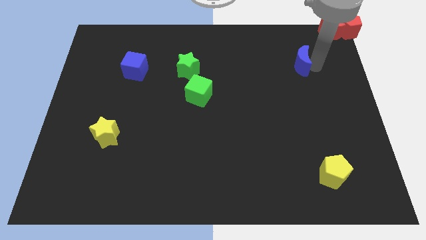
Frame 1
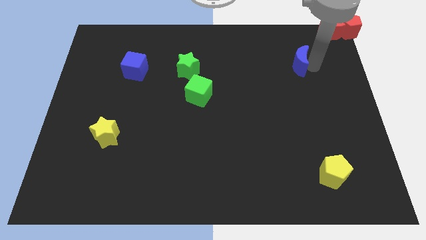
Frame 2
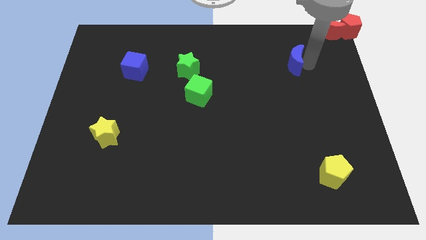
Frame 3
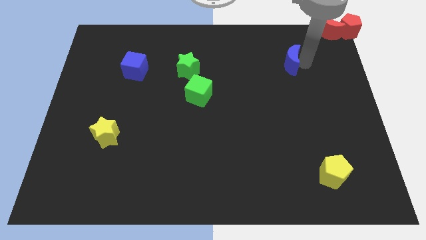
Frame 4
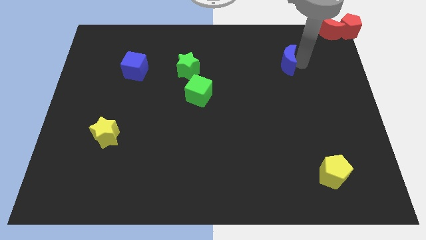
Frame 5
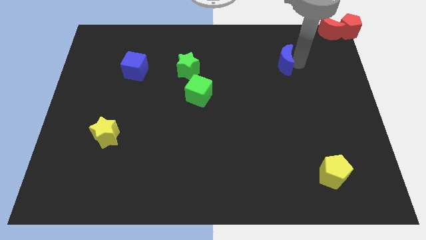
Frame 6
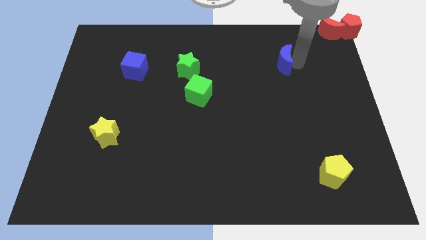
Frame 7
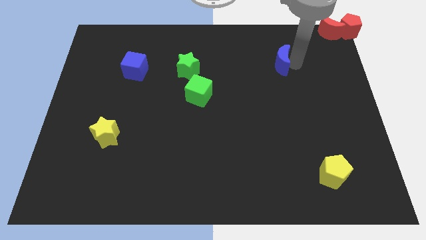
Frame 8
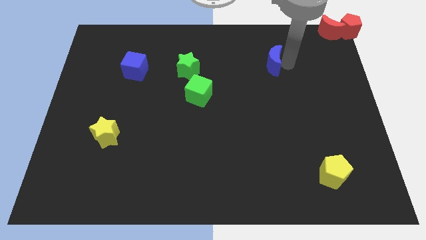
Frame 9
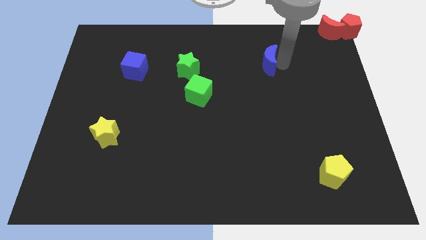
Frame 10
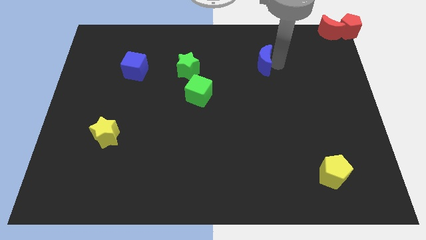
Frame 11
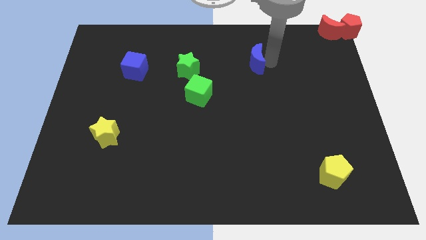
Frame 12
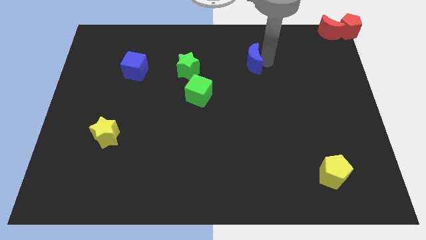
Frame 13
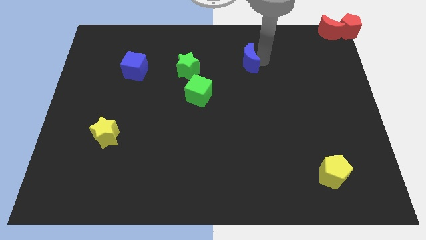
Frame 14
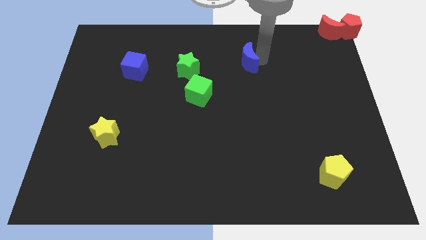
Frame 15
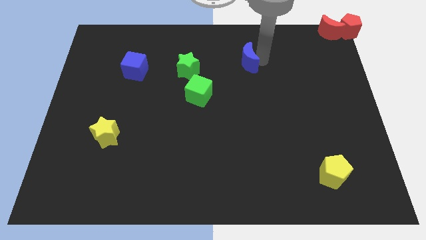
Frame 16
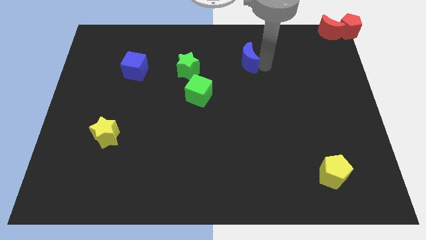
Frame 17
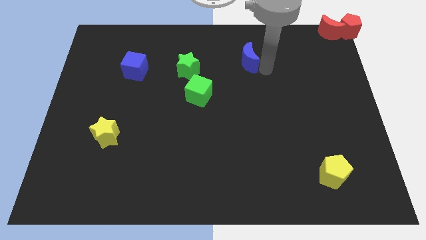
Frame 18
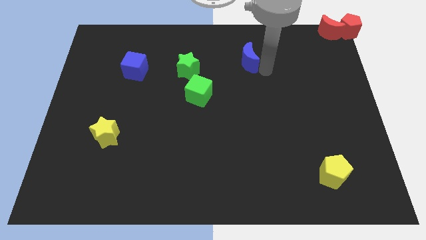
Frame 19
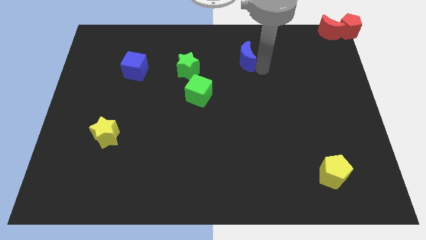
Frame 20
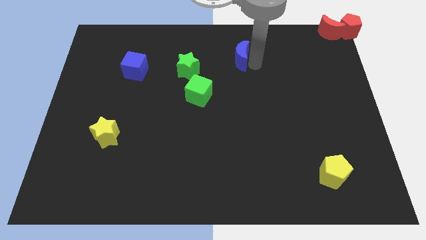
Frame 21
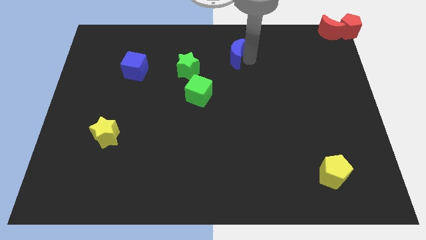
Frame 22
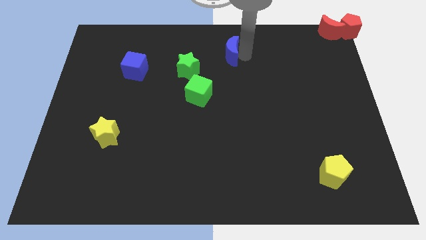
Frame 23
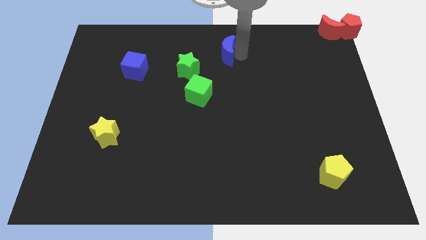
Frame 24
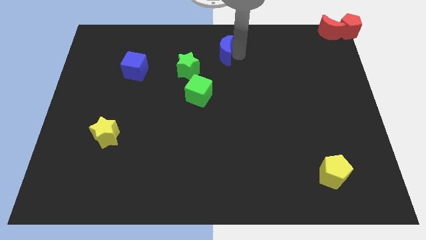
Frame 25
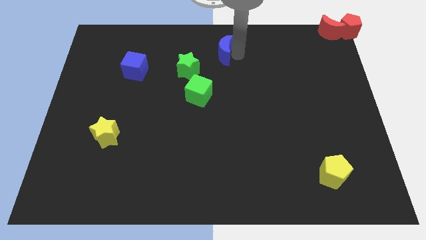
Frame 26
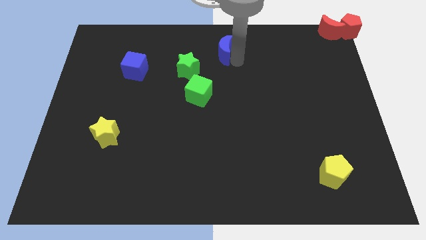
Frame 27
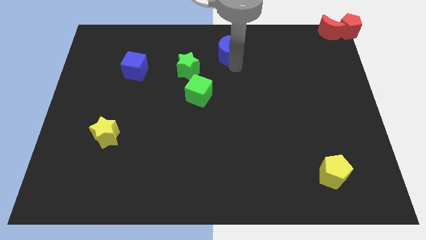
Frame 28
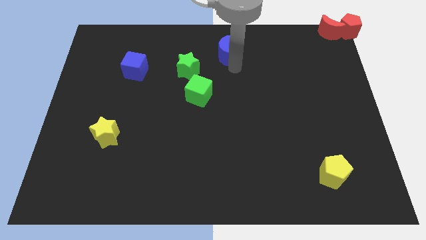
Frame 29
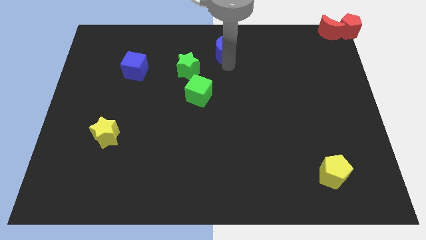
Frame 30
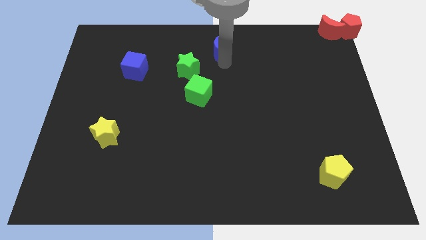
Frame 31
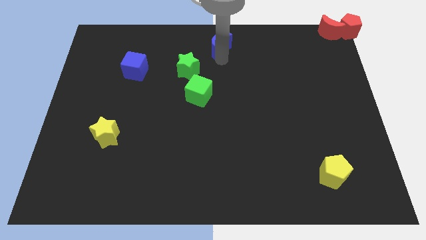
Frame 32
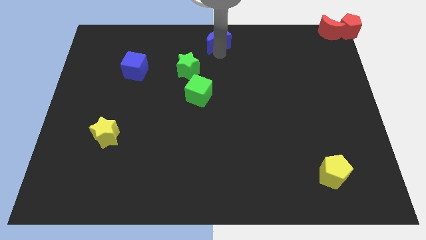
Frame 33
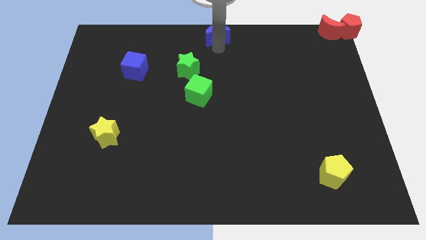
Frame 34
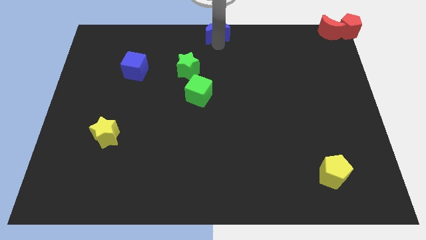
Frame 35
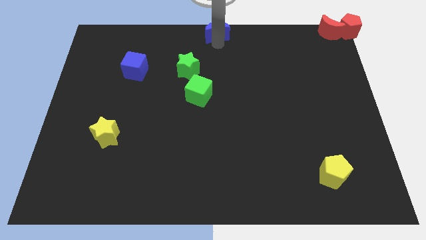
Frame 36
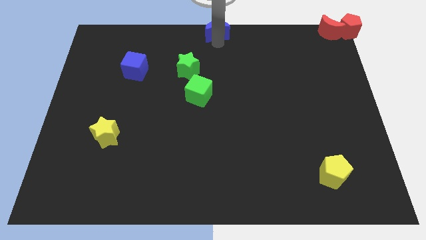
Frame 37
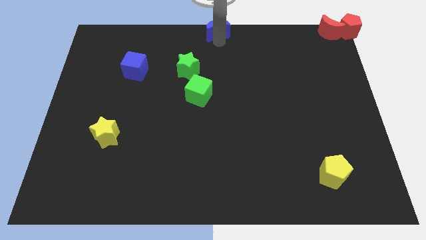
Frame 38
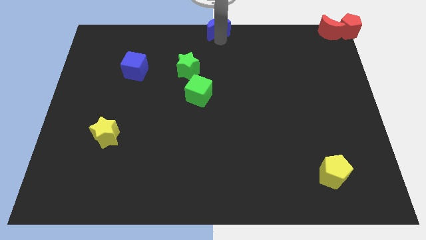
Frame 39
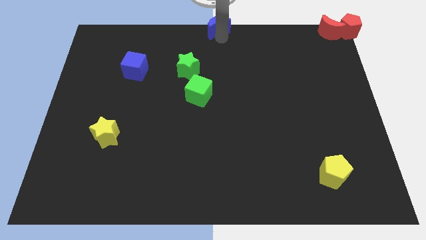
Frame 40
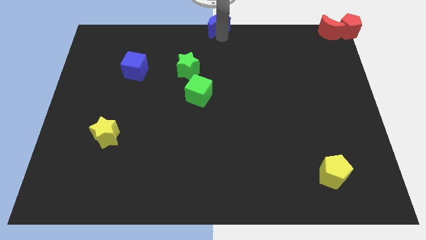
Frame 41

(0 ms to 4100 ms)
move the blue crescent to the top center of the board

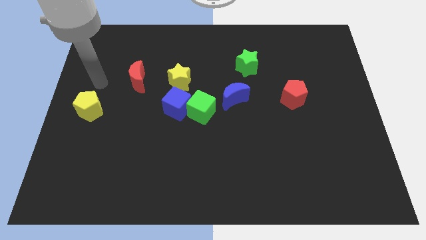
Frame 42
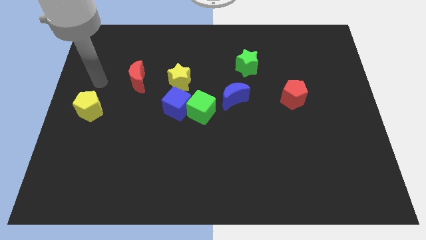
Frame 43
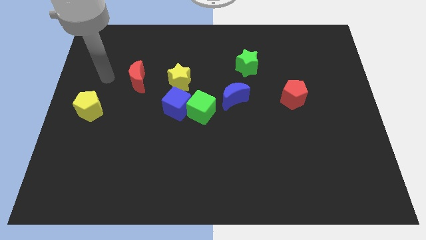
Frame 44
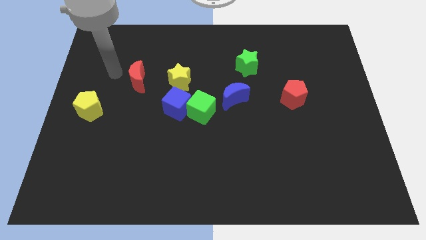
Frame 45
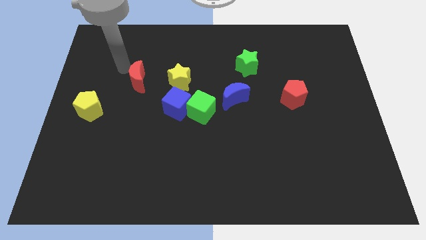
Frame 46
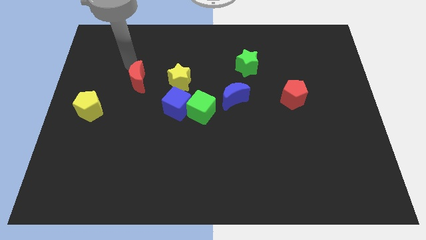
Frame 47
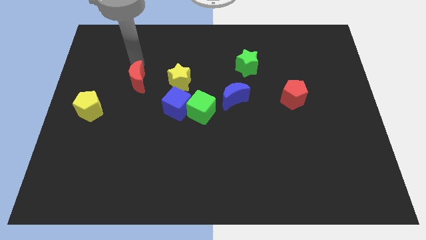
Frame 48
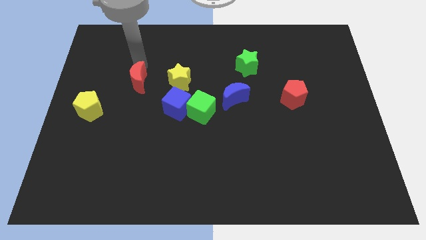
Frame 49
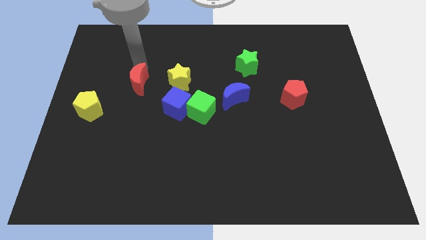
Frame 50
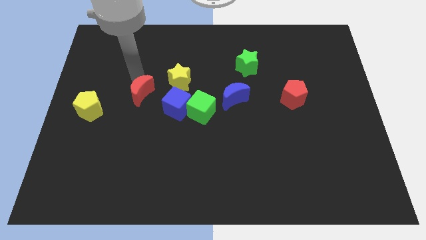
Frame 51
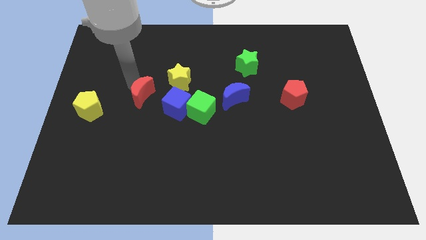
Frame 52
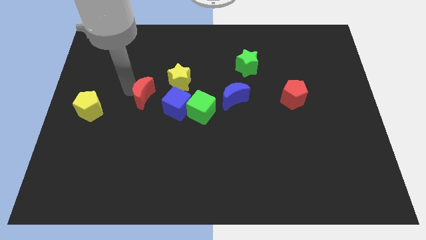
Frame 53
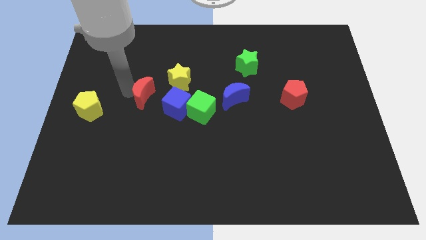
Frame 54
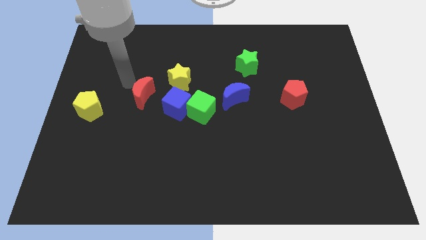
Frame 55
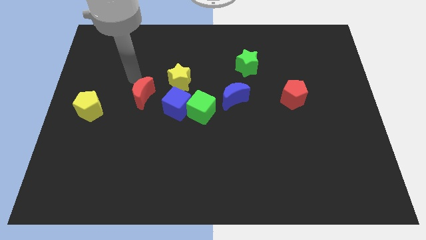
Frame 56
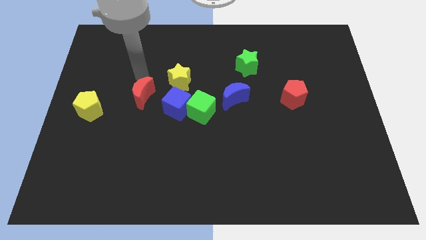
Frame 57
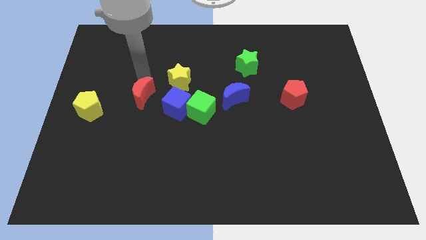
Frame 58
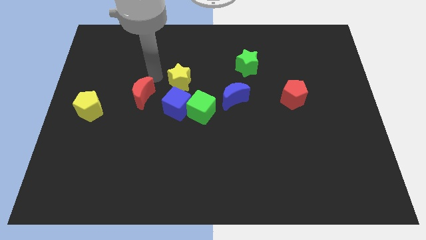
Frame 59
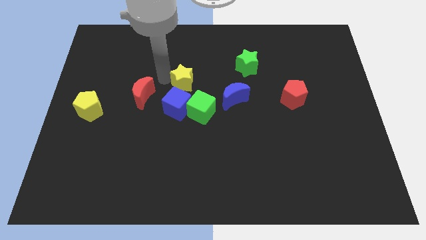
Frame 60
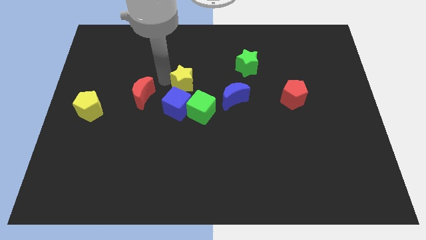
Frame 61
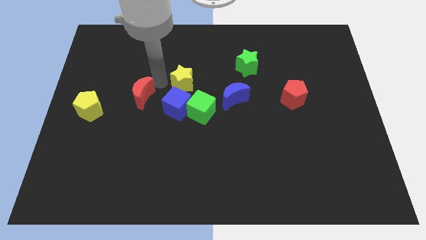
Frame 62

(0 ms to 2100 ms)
move the red moon near to blue cube

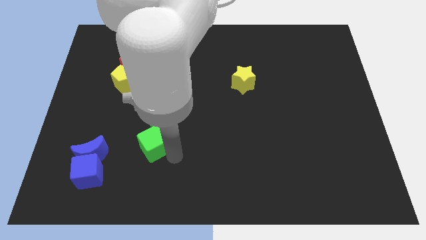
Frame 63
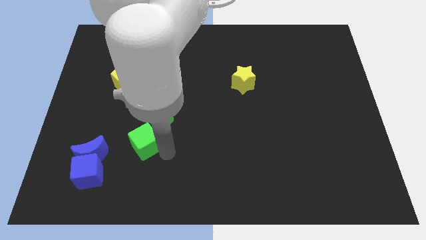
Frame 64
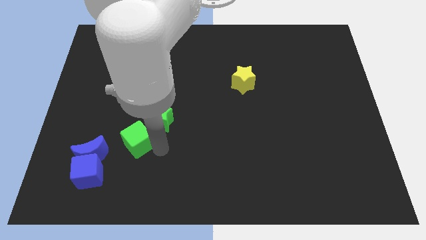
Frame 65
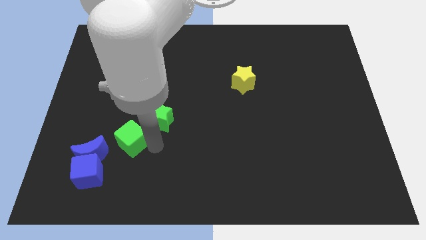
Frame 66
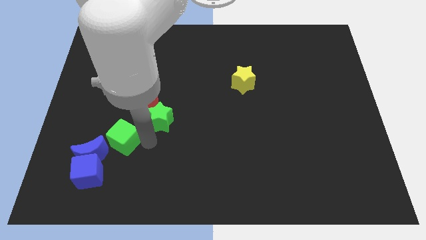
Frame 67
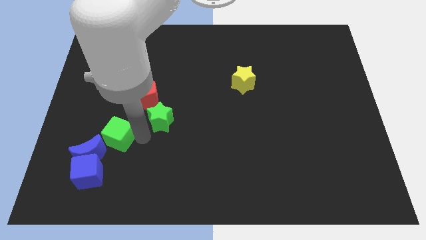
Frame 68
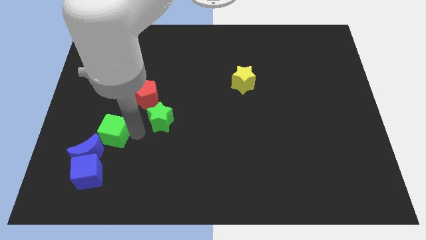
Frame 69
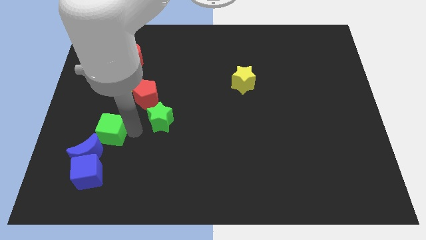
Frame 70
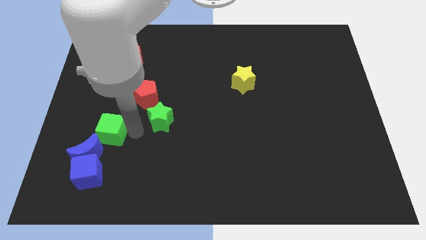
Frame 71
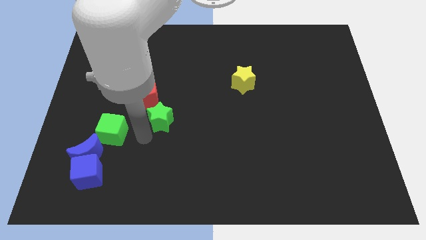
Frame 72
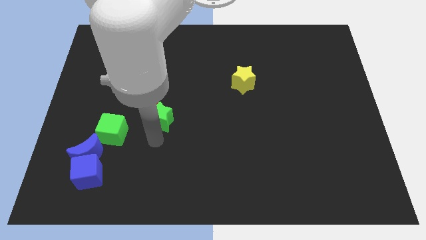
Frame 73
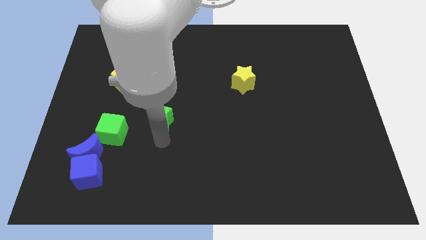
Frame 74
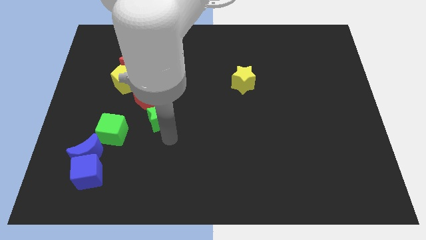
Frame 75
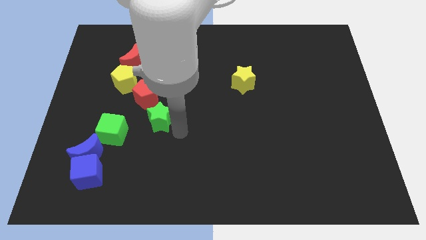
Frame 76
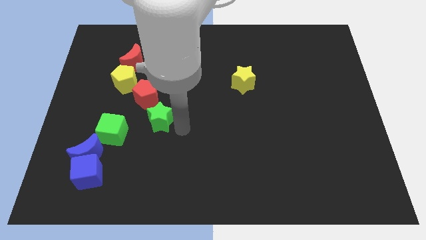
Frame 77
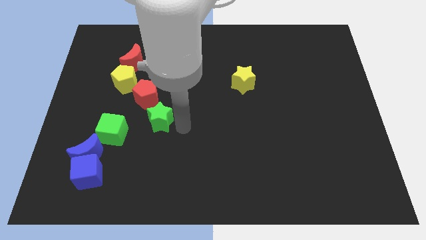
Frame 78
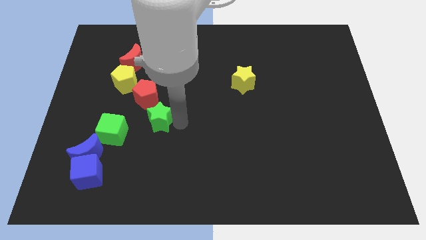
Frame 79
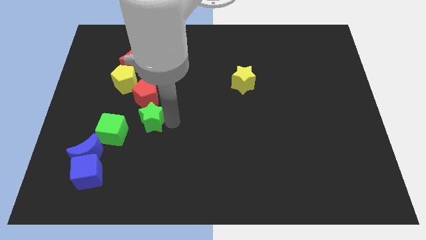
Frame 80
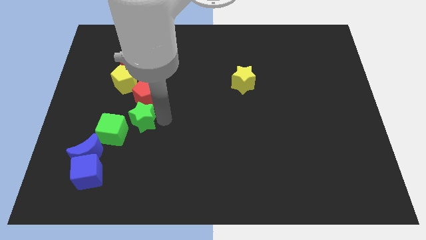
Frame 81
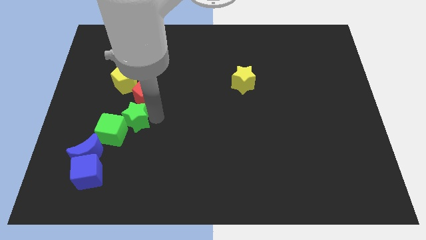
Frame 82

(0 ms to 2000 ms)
move the green cube close to the blue moon

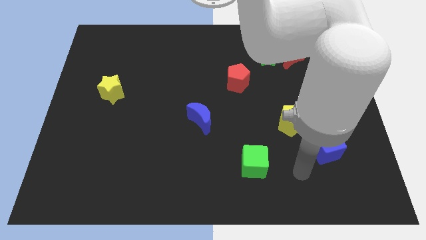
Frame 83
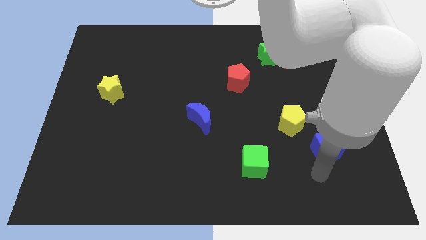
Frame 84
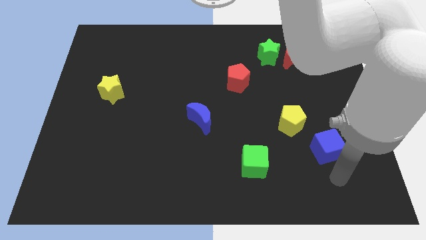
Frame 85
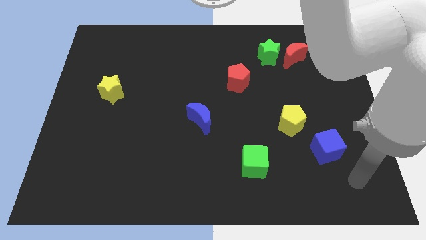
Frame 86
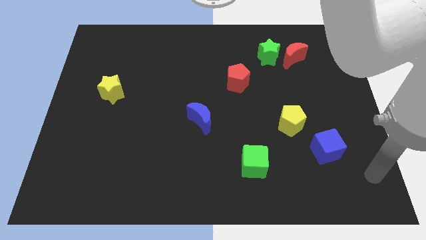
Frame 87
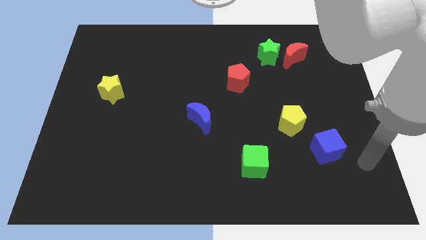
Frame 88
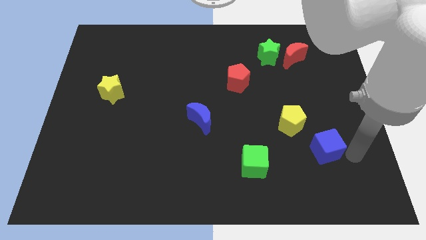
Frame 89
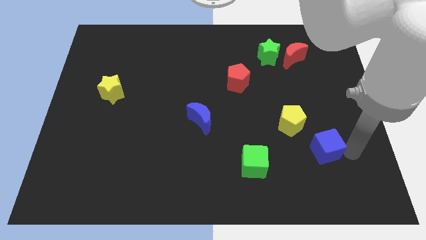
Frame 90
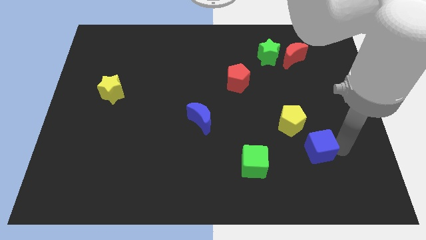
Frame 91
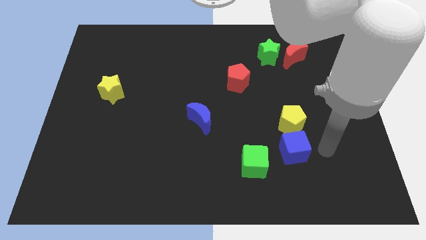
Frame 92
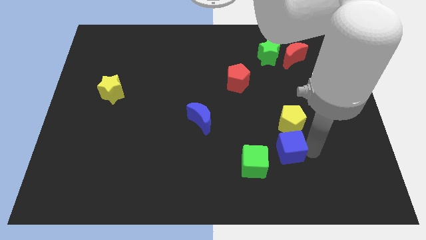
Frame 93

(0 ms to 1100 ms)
push the blue cube to the bottom of the yellow pentagon
